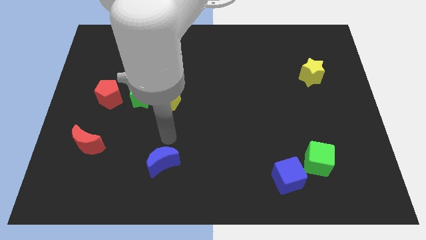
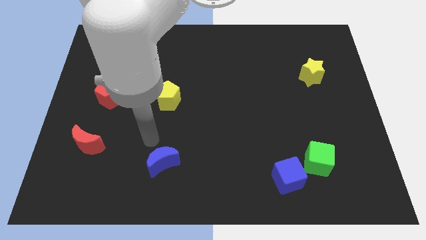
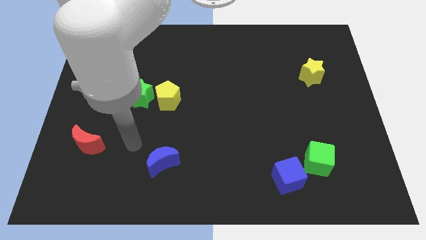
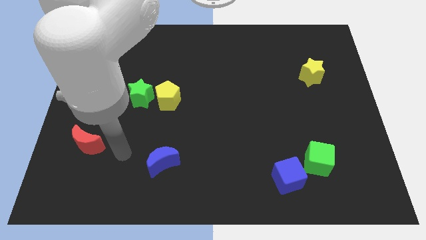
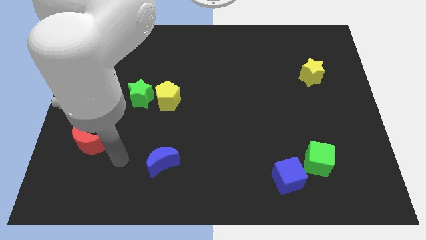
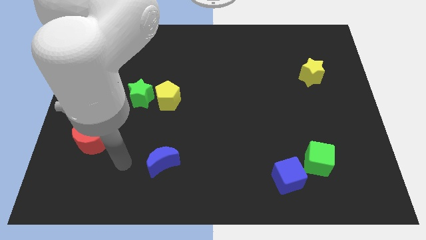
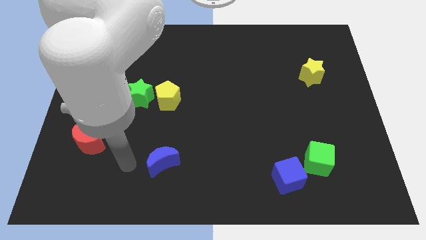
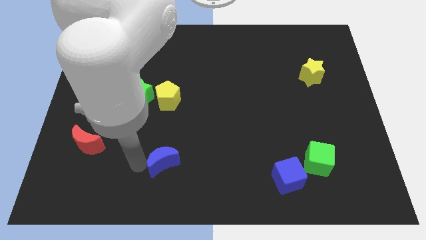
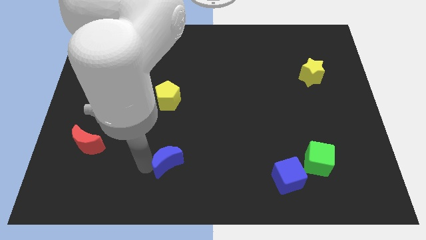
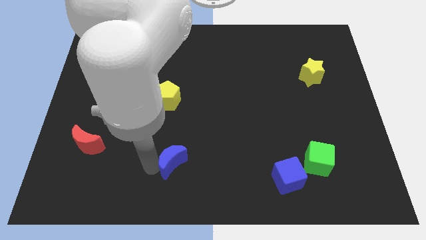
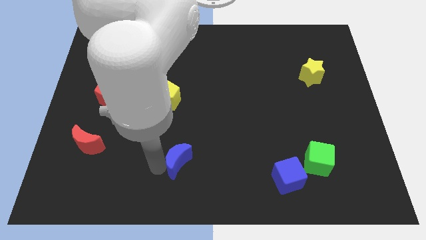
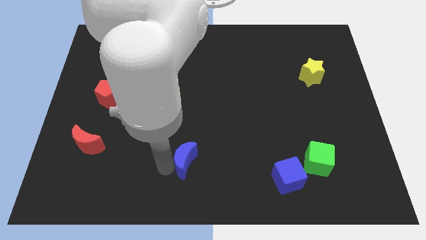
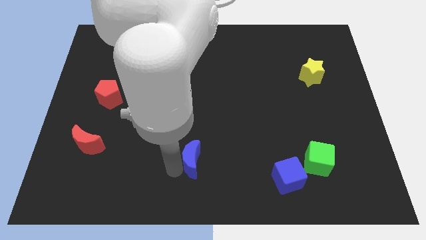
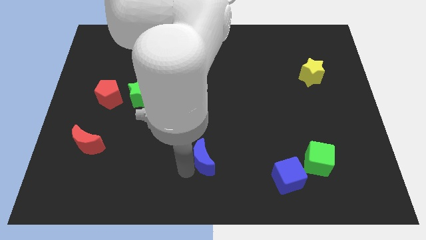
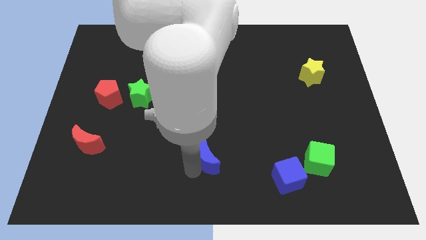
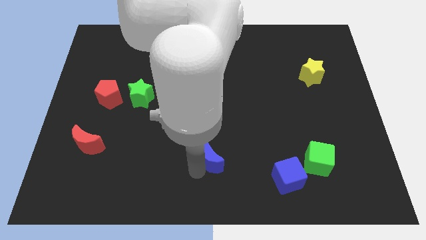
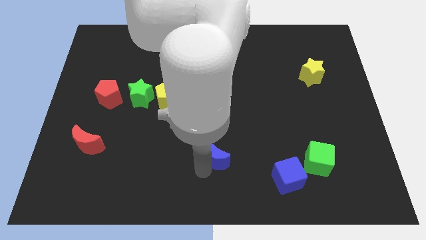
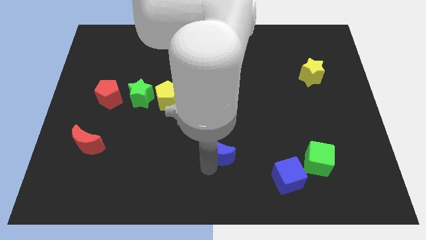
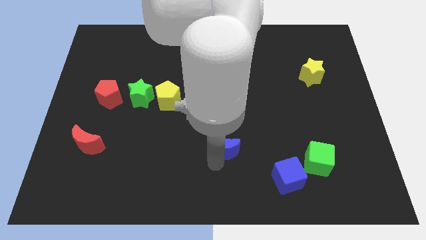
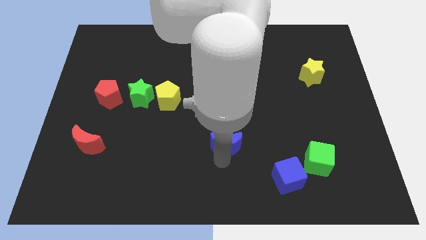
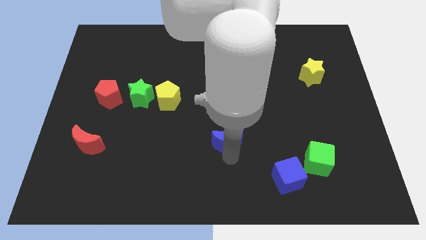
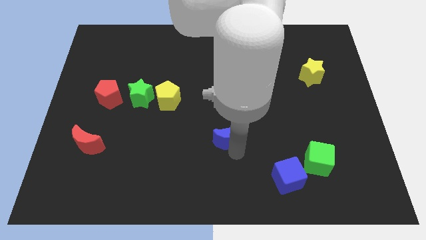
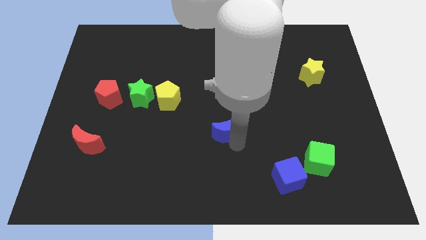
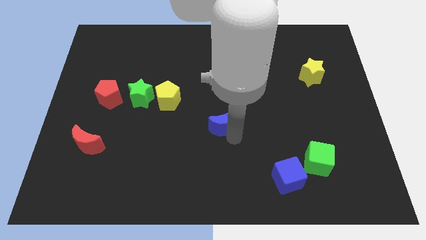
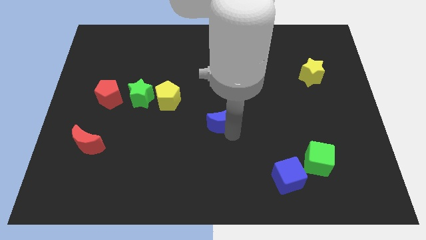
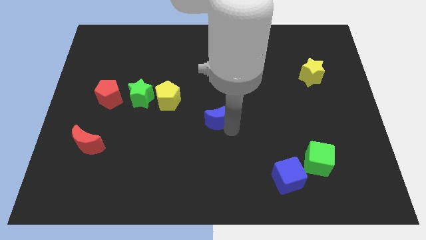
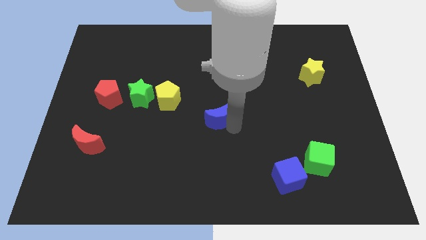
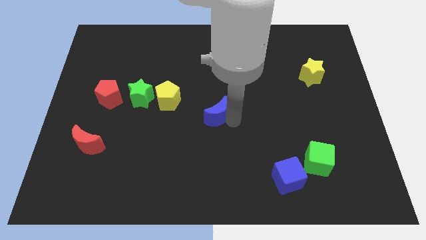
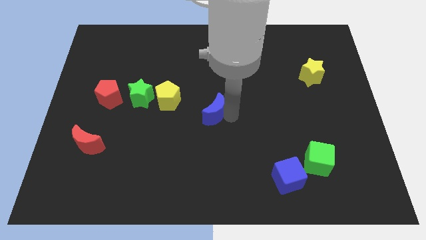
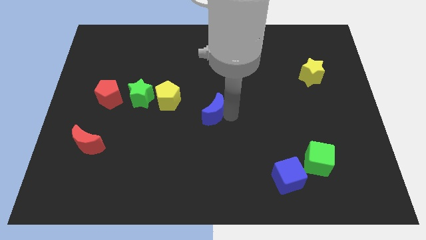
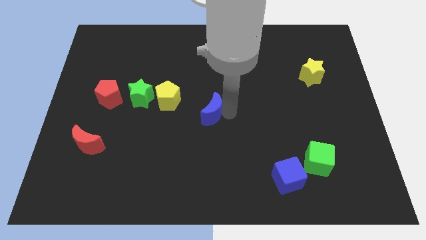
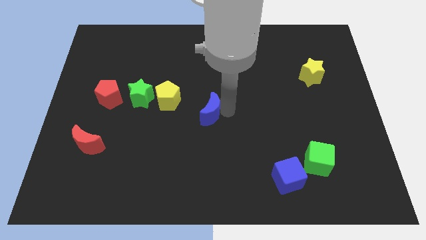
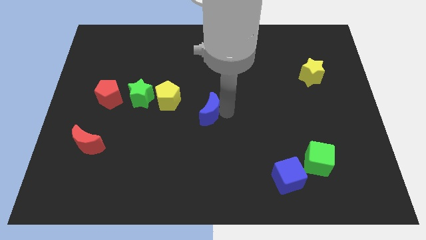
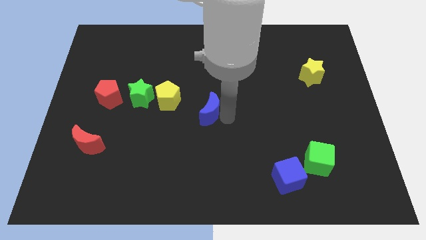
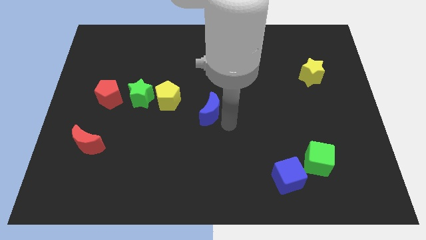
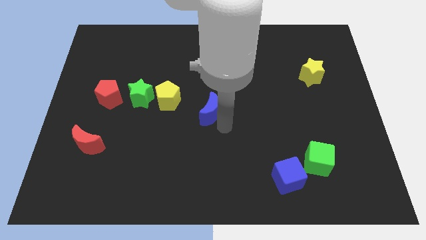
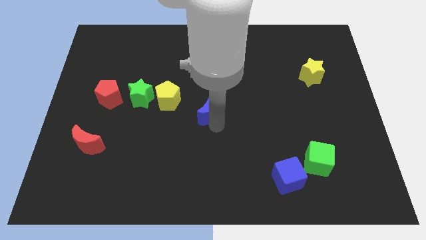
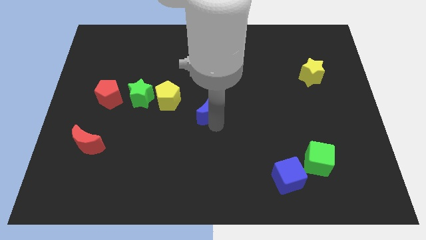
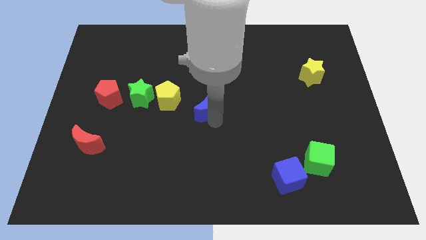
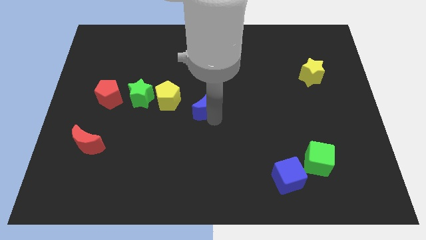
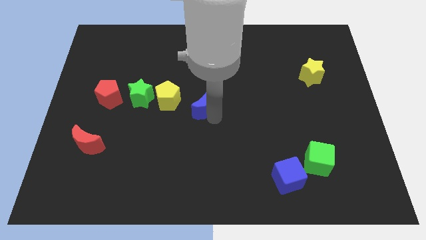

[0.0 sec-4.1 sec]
move the blue moon right to the yellow pentagon

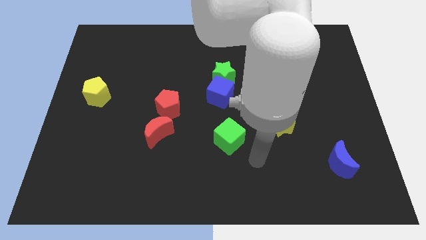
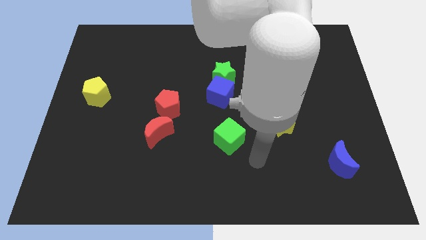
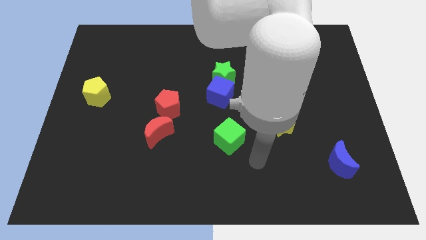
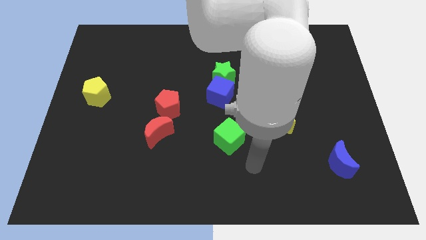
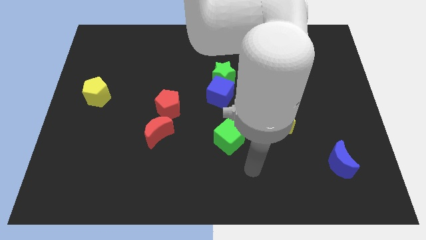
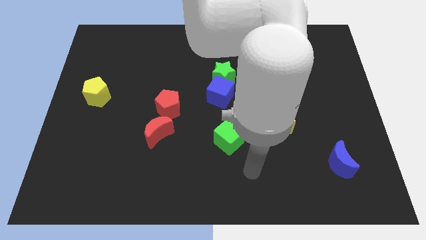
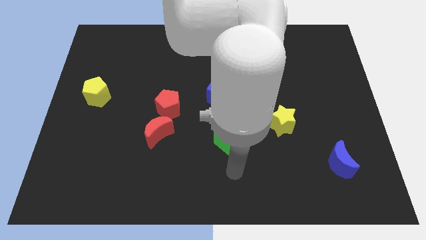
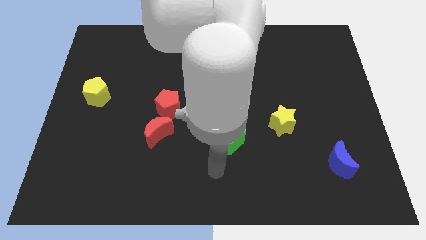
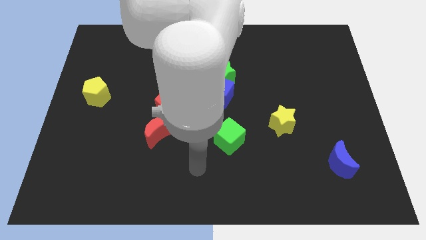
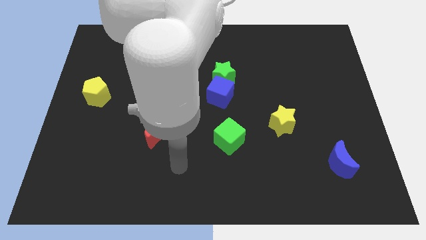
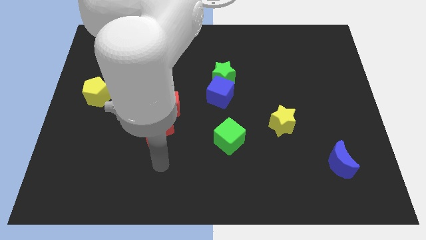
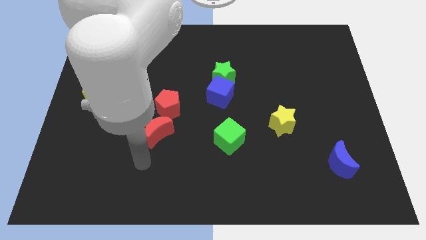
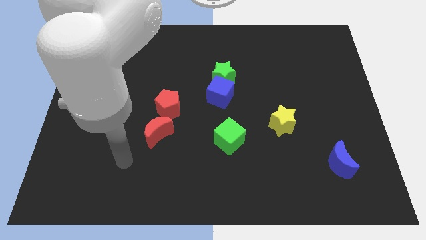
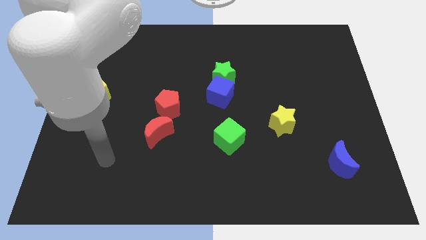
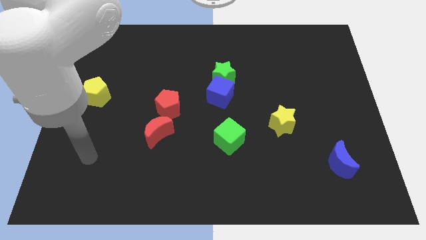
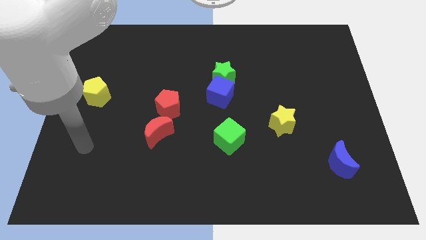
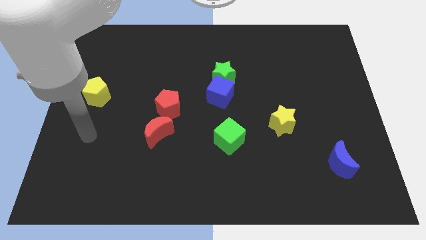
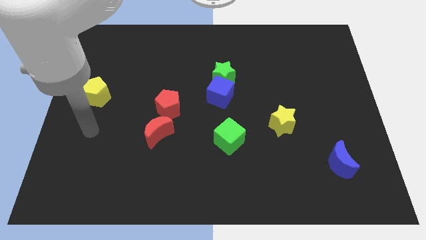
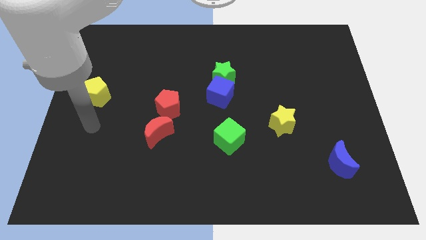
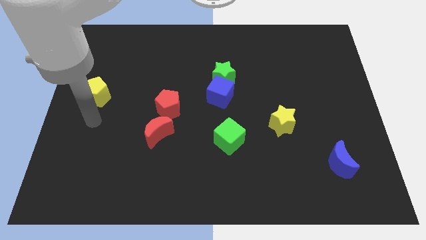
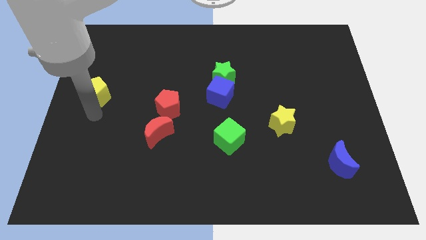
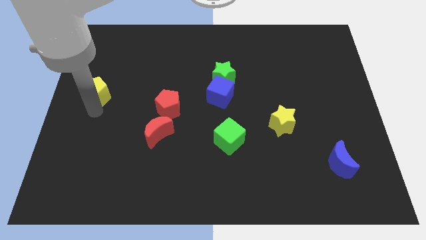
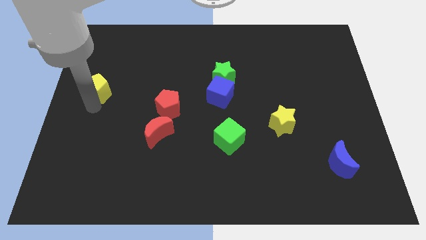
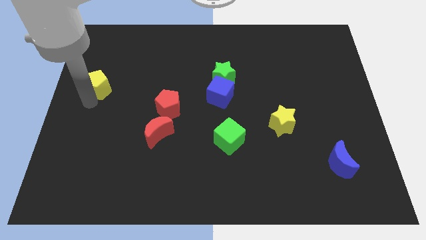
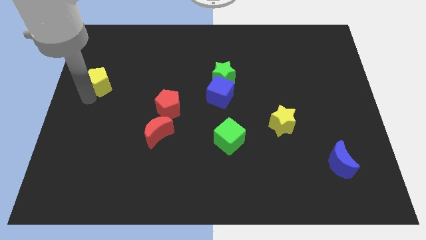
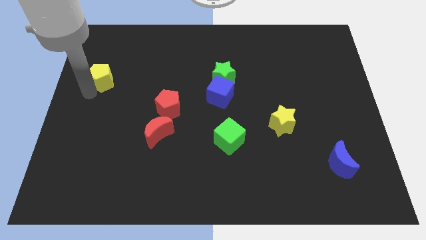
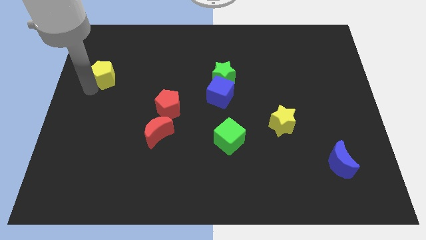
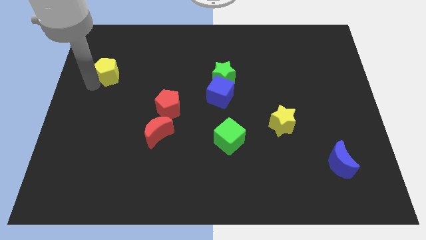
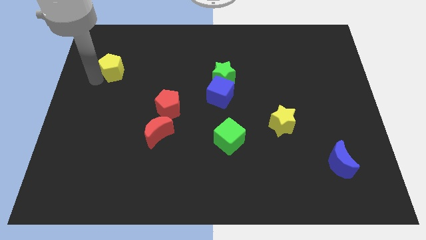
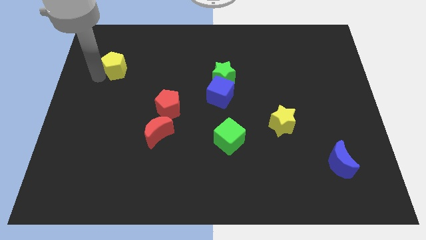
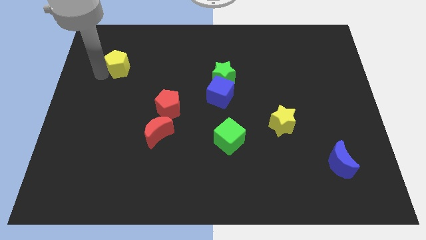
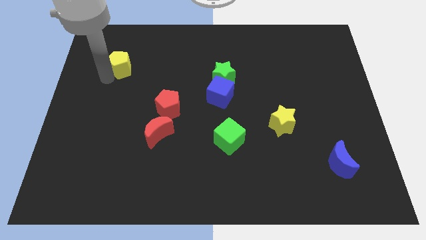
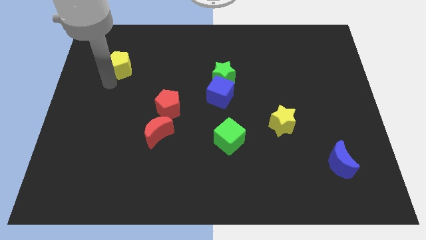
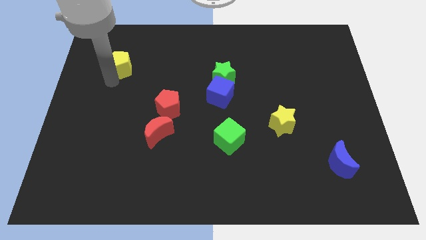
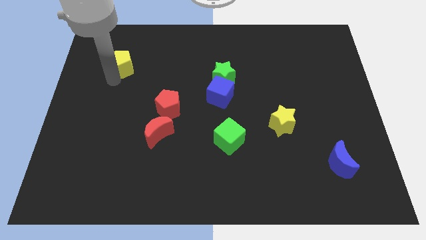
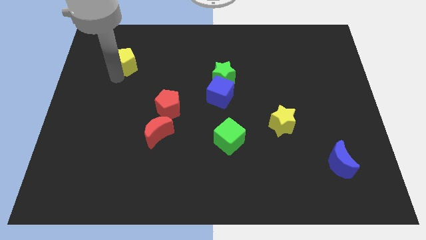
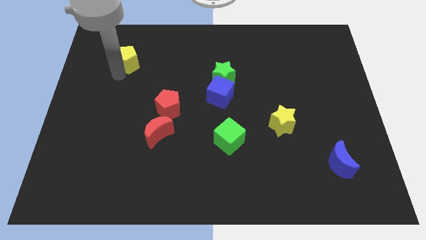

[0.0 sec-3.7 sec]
place the yellow pentagon diagonally to blue cube

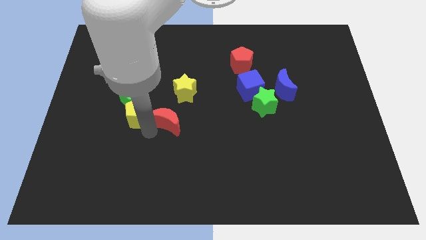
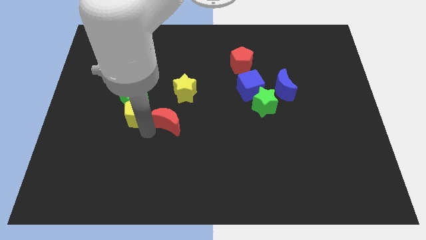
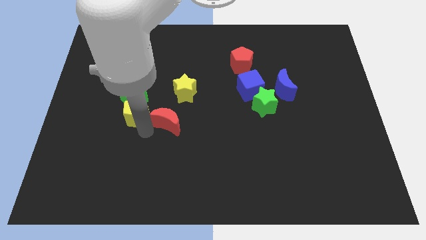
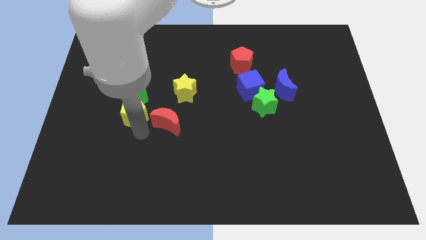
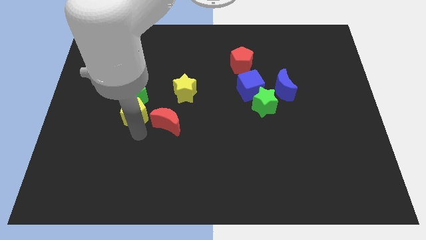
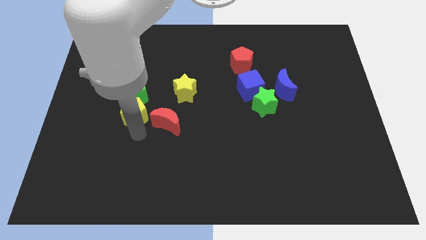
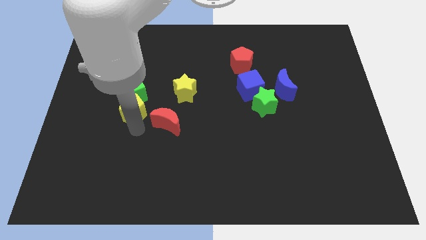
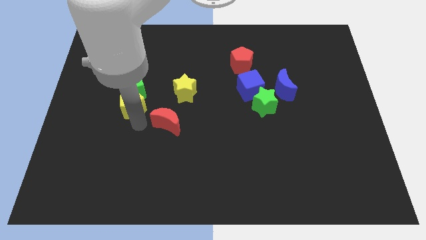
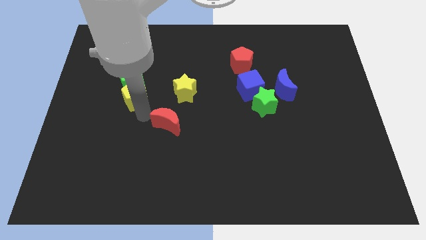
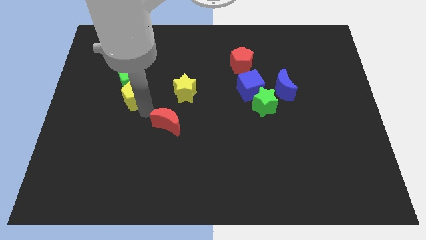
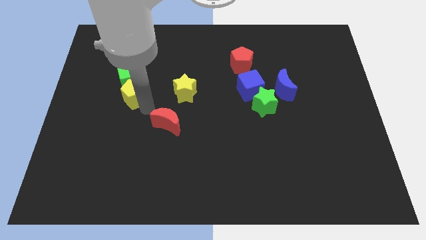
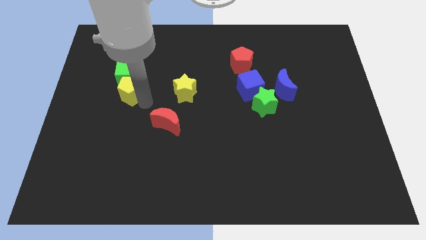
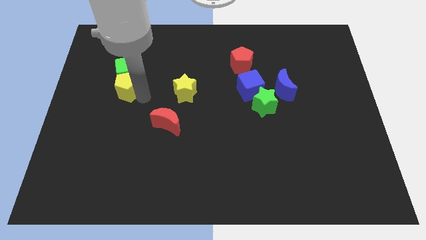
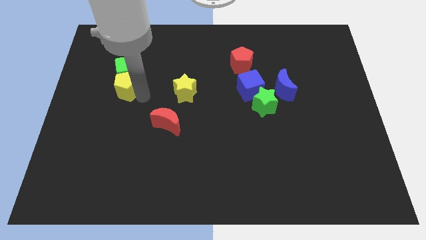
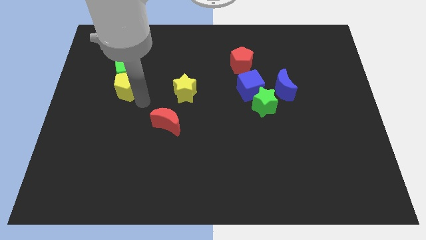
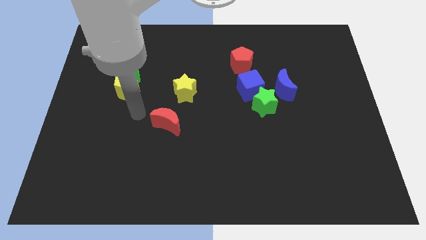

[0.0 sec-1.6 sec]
push the yellow pentagon and green cube together slightly to the top side of the board
